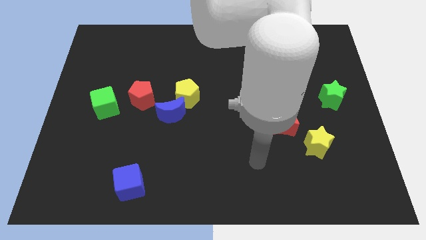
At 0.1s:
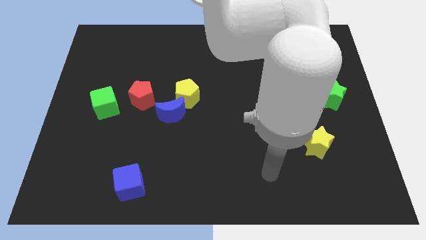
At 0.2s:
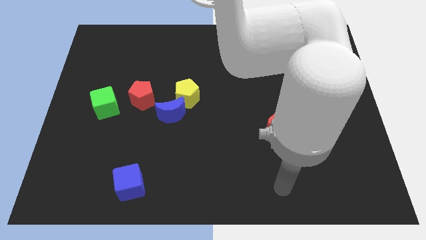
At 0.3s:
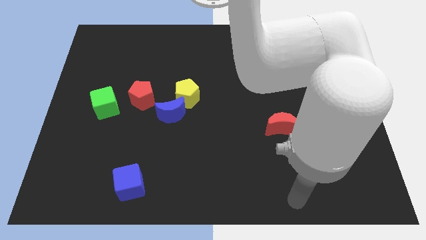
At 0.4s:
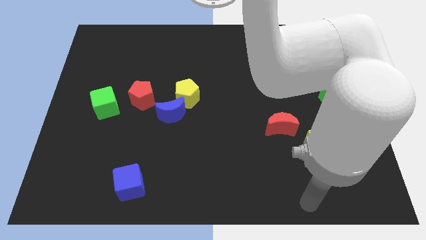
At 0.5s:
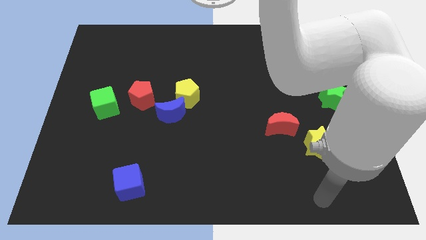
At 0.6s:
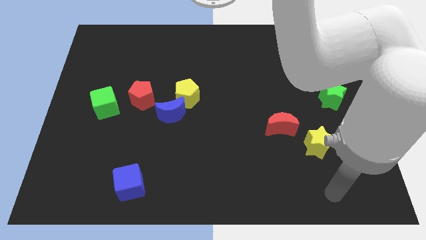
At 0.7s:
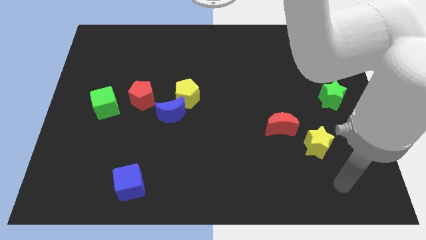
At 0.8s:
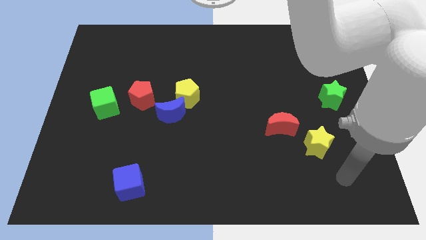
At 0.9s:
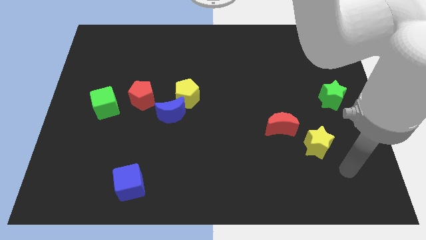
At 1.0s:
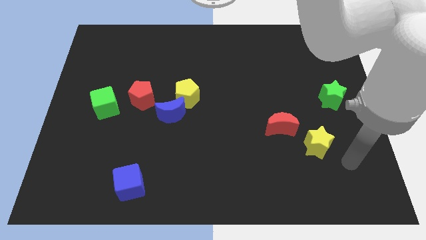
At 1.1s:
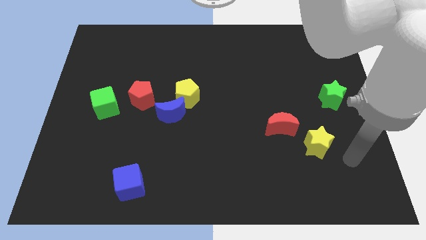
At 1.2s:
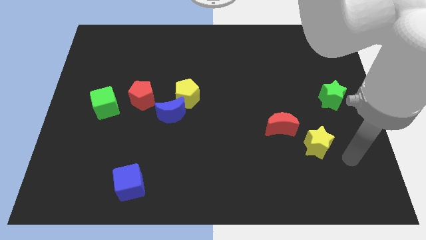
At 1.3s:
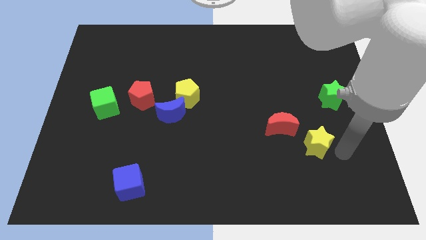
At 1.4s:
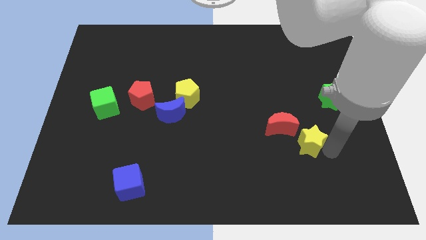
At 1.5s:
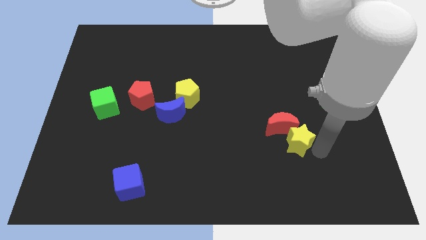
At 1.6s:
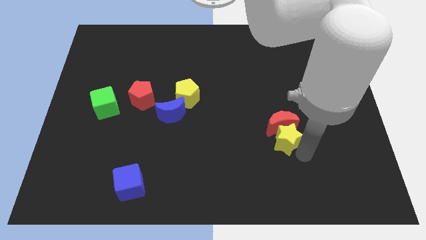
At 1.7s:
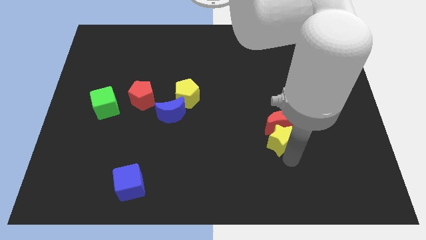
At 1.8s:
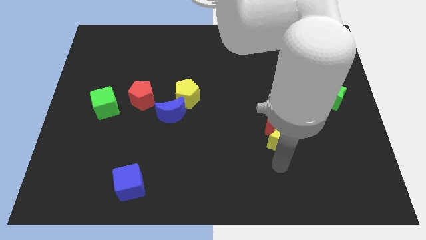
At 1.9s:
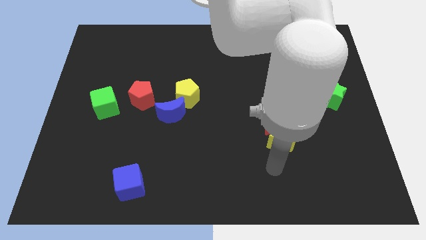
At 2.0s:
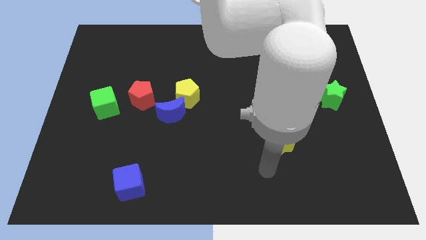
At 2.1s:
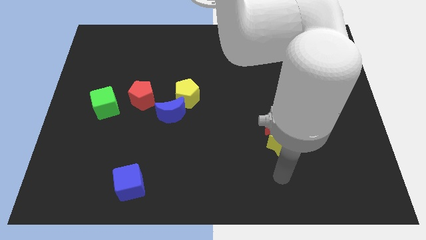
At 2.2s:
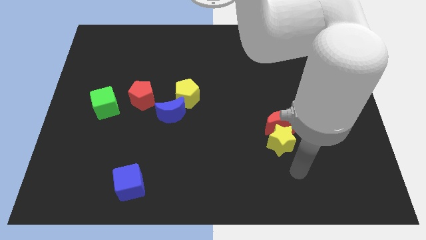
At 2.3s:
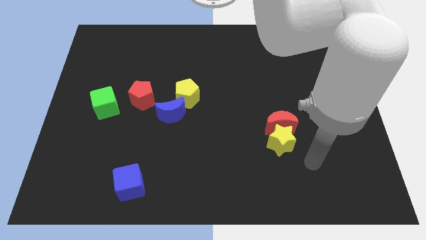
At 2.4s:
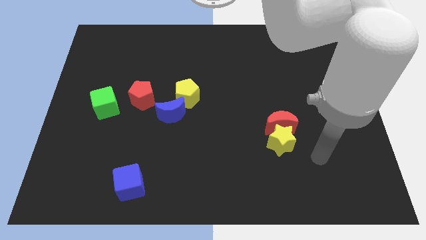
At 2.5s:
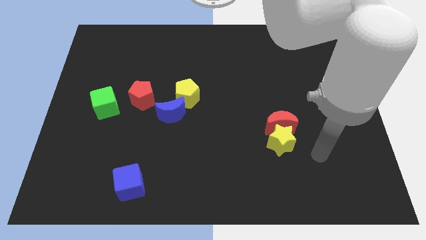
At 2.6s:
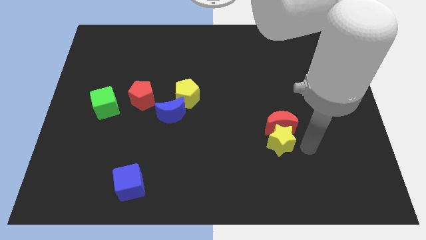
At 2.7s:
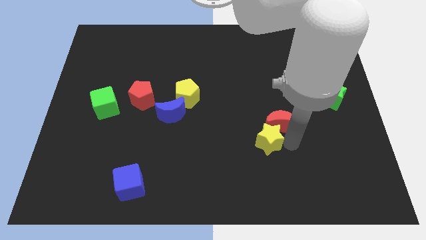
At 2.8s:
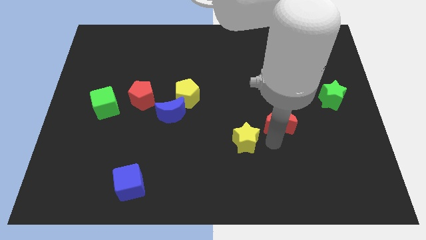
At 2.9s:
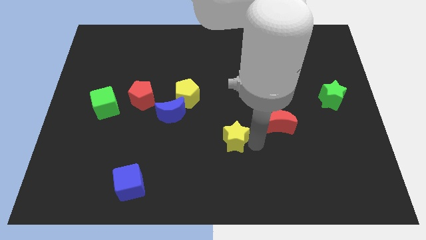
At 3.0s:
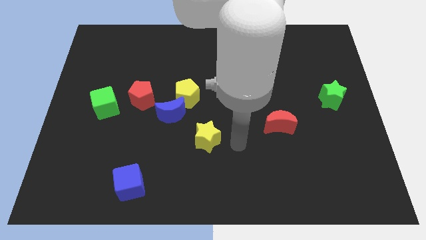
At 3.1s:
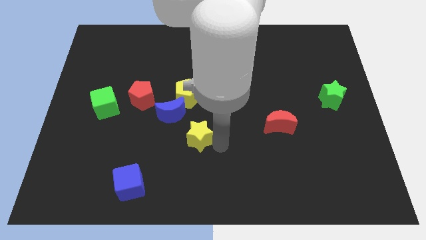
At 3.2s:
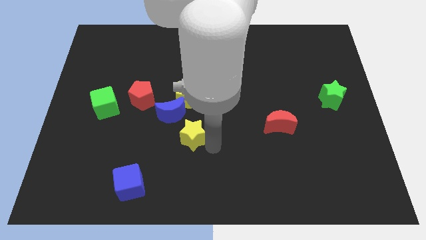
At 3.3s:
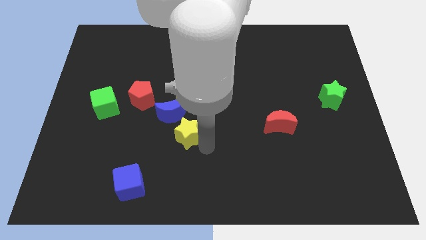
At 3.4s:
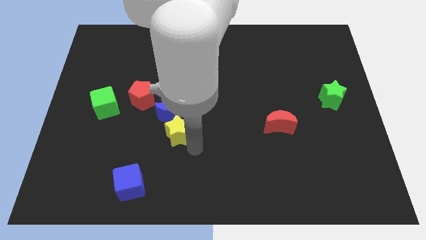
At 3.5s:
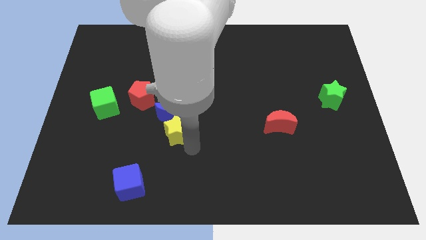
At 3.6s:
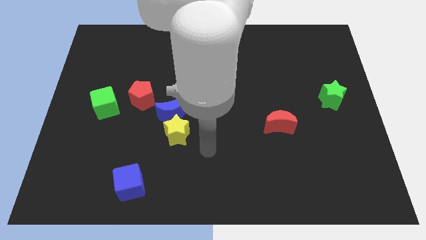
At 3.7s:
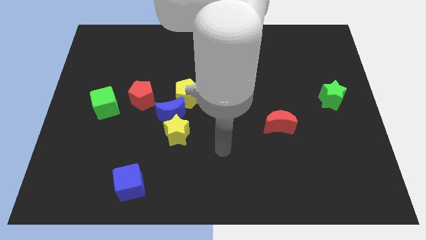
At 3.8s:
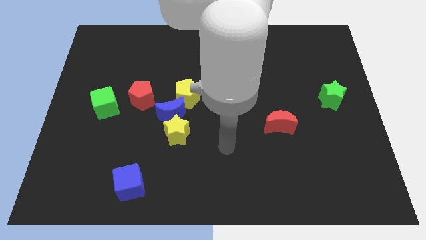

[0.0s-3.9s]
move the yellow star to the bottom side of the blue moon

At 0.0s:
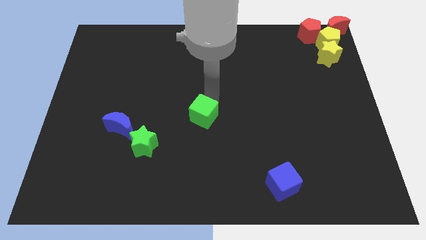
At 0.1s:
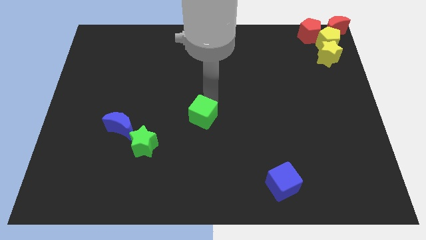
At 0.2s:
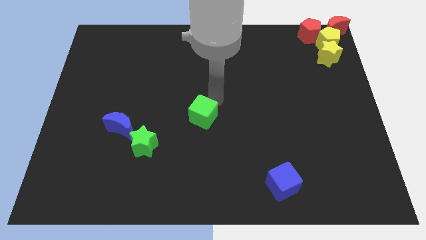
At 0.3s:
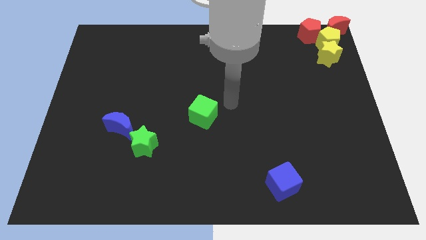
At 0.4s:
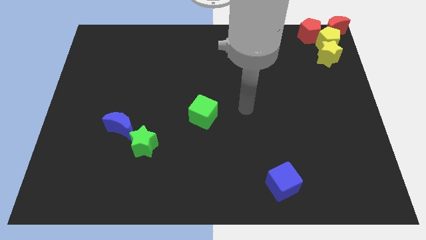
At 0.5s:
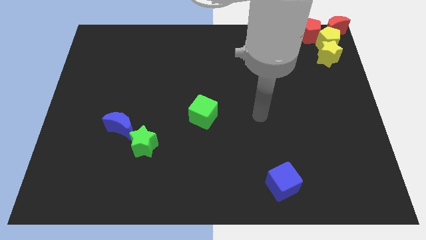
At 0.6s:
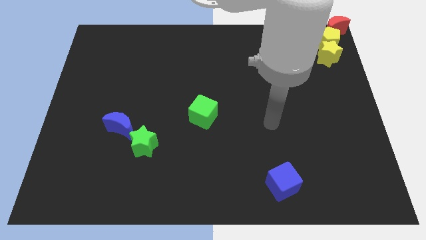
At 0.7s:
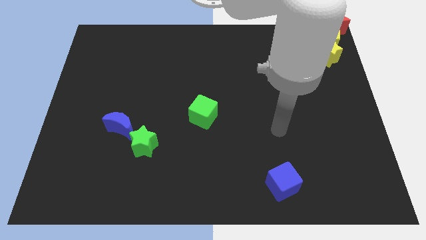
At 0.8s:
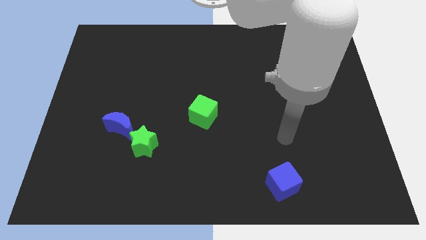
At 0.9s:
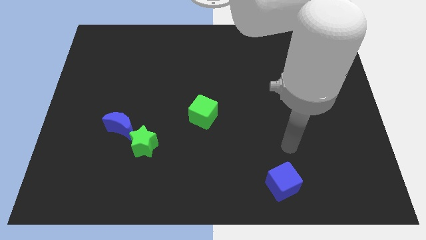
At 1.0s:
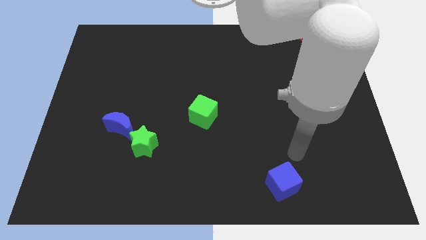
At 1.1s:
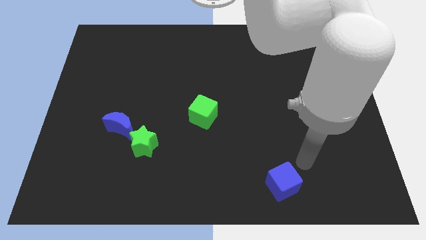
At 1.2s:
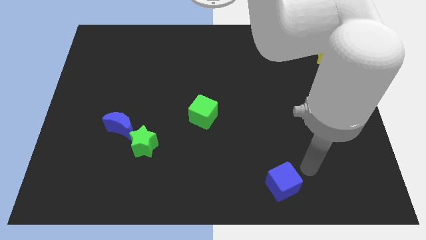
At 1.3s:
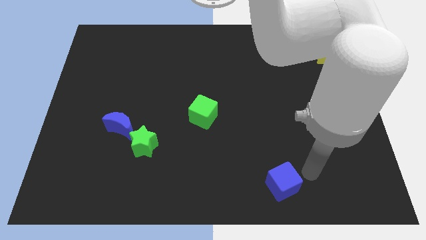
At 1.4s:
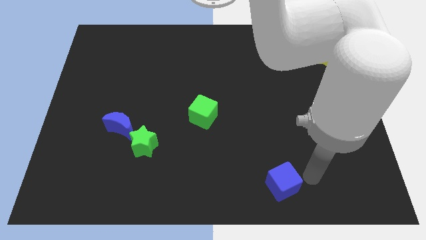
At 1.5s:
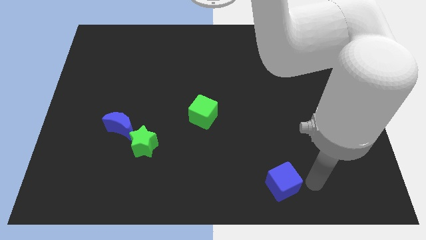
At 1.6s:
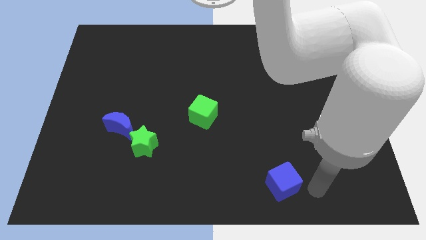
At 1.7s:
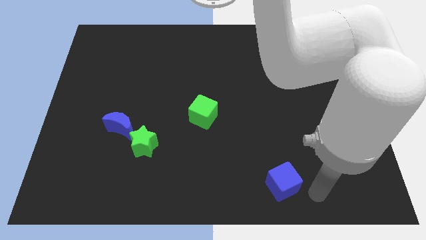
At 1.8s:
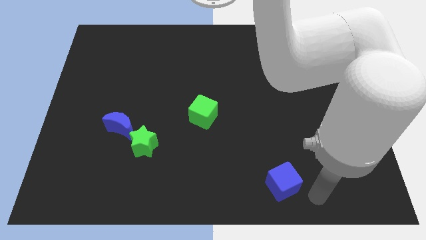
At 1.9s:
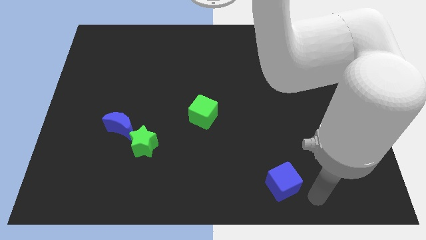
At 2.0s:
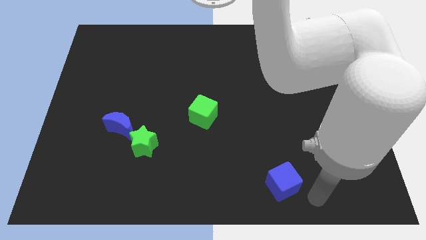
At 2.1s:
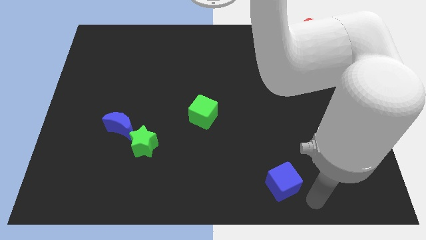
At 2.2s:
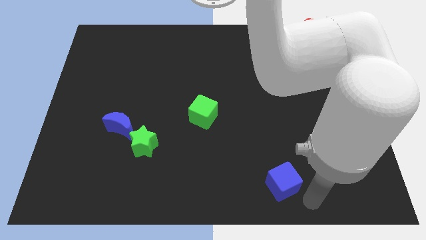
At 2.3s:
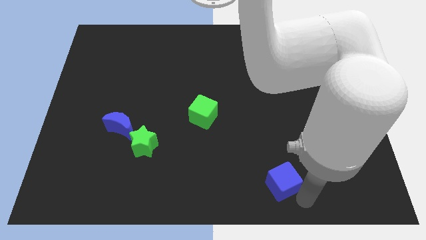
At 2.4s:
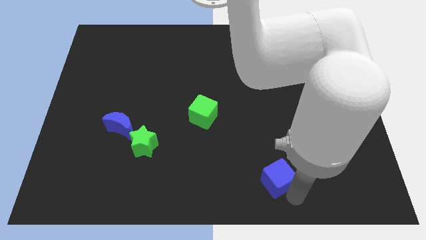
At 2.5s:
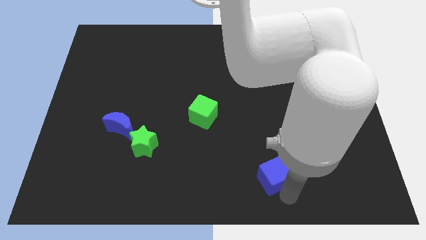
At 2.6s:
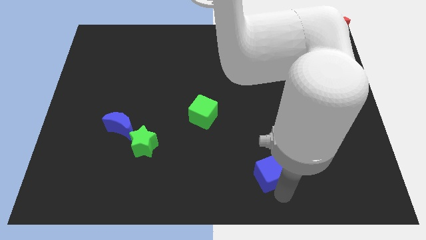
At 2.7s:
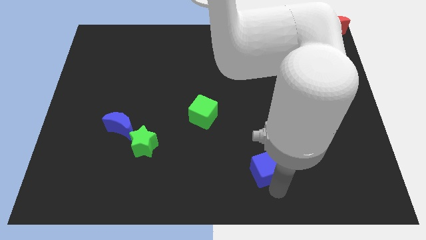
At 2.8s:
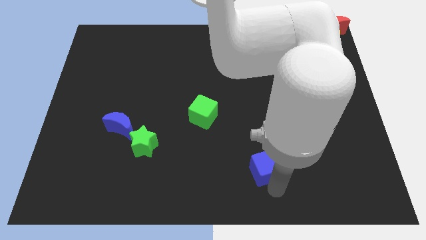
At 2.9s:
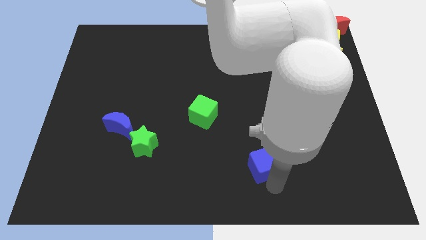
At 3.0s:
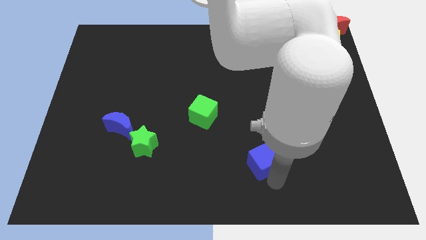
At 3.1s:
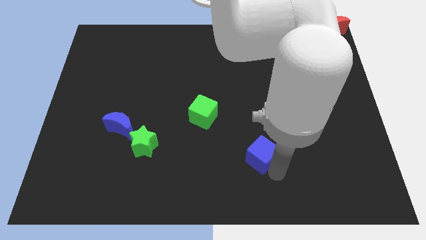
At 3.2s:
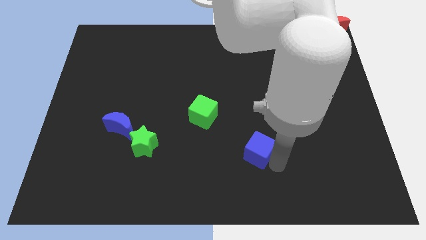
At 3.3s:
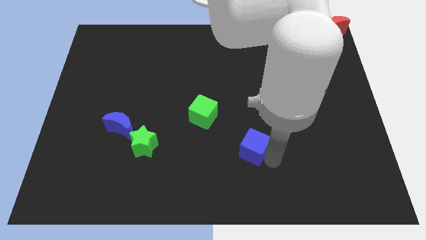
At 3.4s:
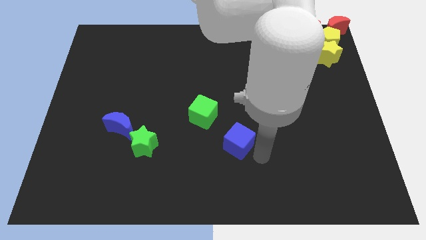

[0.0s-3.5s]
place the blue cube diagonally below the green star

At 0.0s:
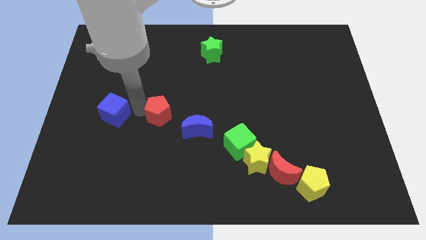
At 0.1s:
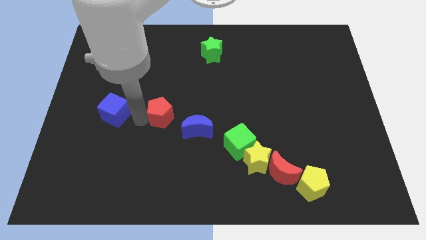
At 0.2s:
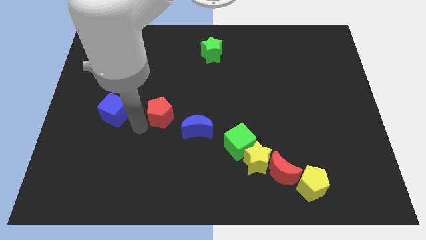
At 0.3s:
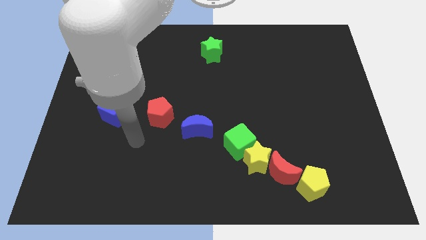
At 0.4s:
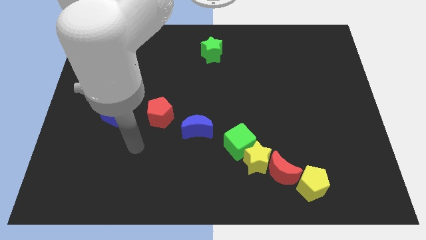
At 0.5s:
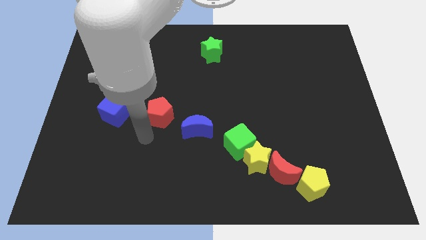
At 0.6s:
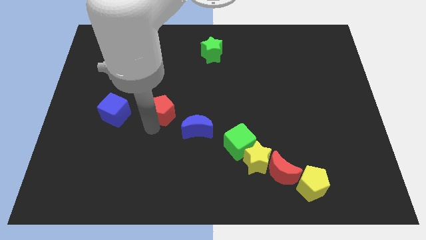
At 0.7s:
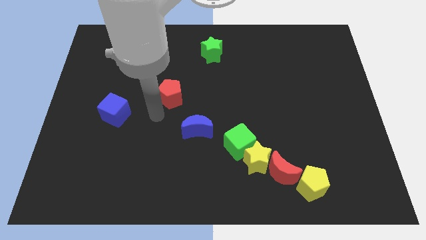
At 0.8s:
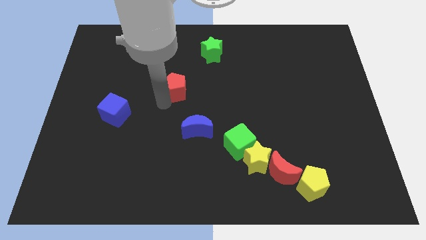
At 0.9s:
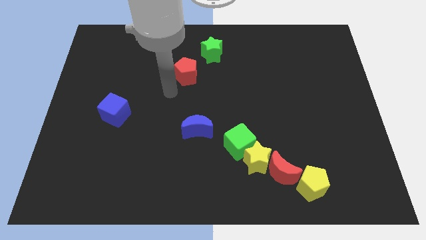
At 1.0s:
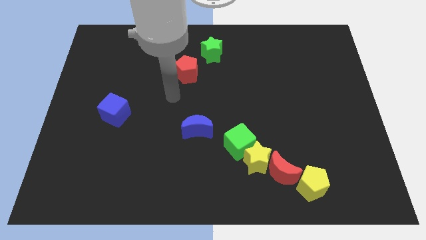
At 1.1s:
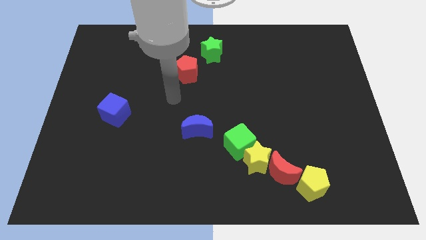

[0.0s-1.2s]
place the red pentagon diagonally to green star

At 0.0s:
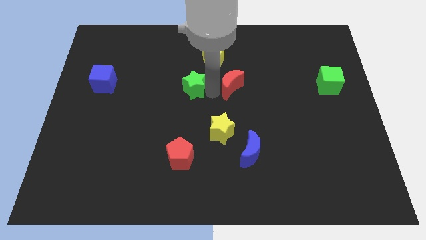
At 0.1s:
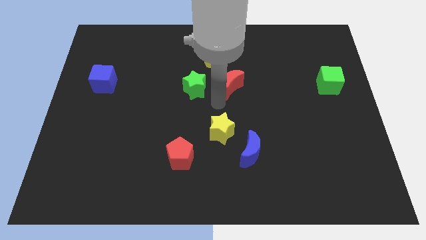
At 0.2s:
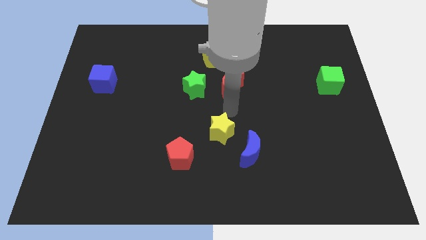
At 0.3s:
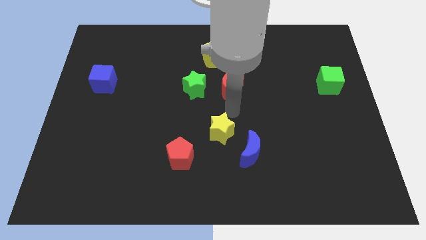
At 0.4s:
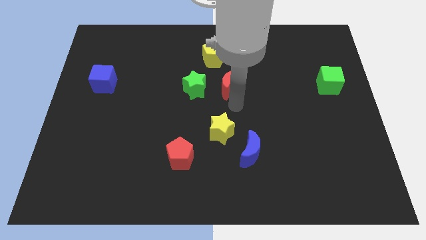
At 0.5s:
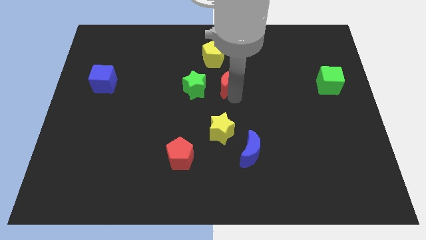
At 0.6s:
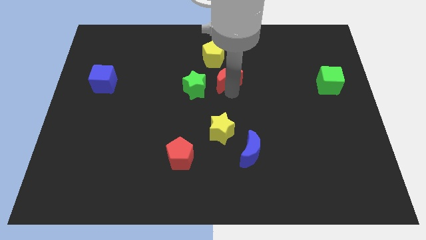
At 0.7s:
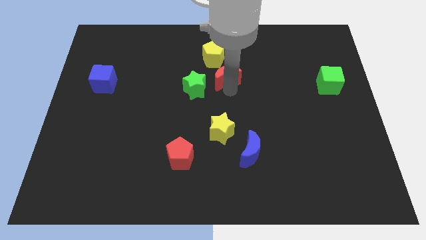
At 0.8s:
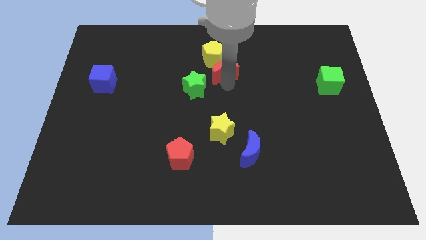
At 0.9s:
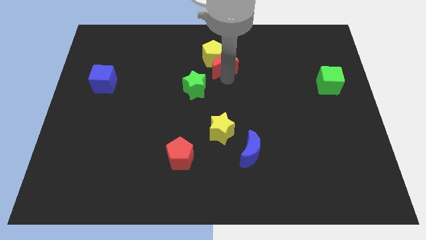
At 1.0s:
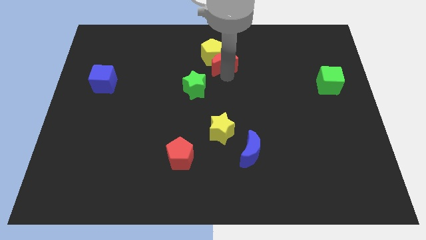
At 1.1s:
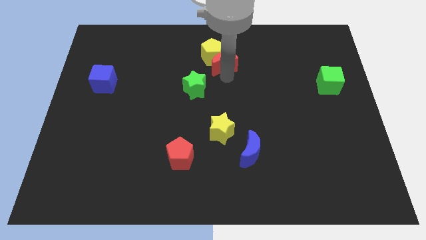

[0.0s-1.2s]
push red moon into yellow pentagon
